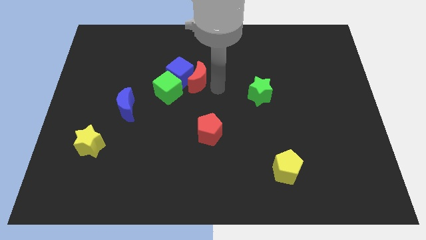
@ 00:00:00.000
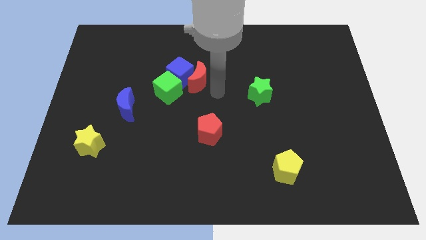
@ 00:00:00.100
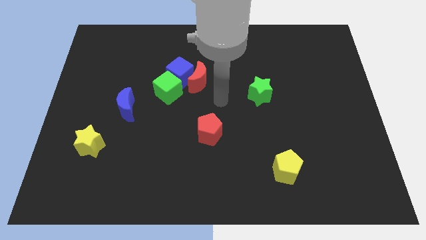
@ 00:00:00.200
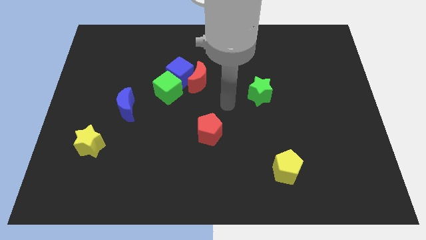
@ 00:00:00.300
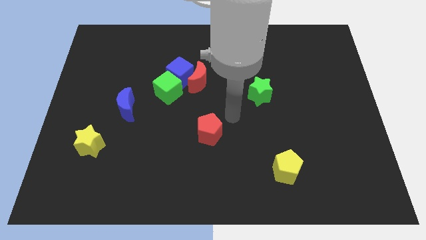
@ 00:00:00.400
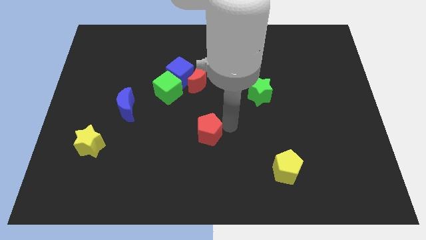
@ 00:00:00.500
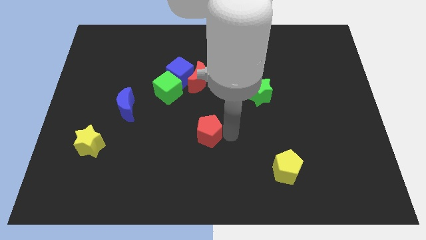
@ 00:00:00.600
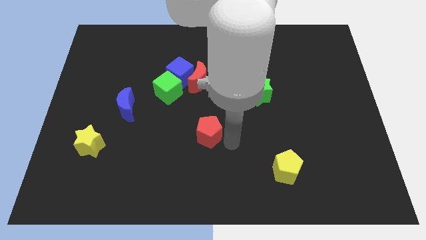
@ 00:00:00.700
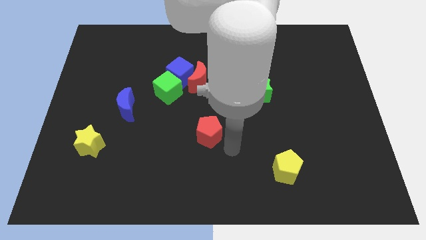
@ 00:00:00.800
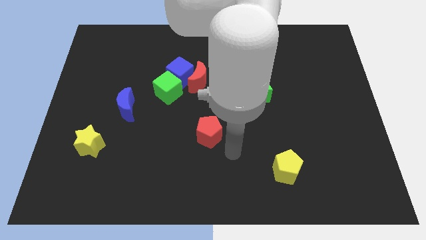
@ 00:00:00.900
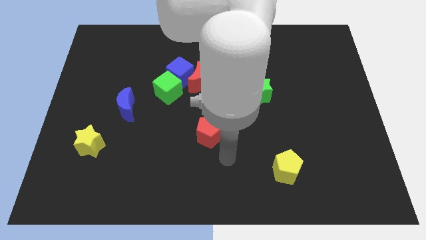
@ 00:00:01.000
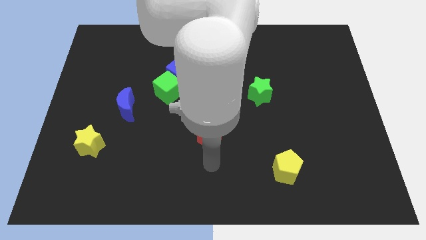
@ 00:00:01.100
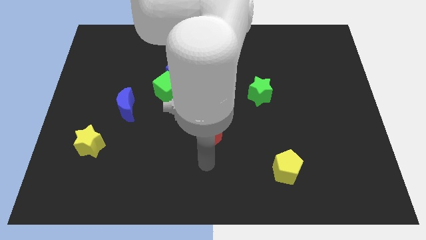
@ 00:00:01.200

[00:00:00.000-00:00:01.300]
point your arm at the bottom of the red pentagon

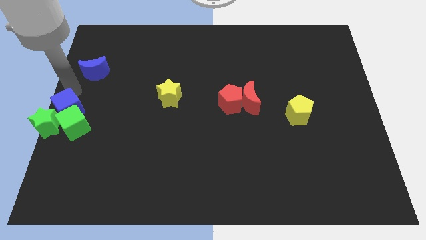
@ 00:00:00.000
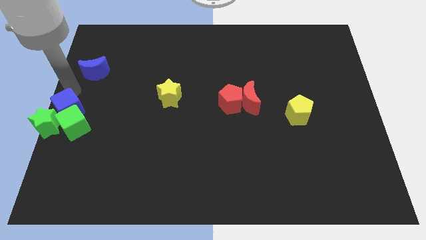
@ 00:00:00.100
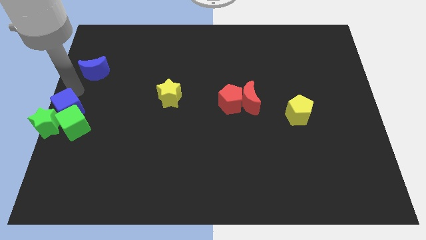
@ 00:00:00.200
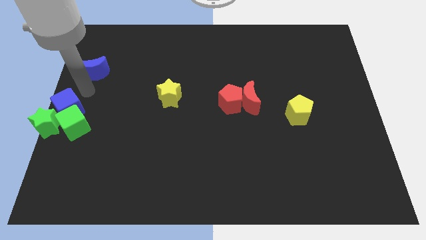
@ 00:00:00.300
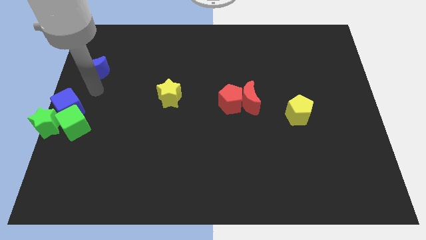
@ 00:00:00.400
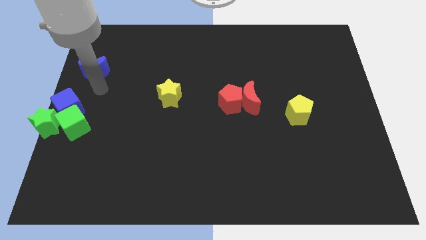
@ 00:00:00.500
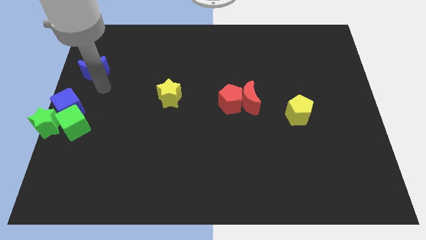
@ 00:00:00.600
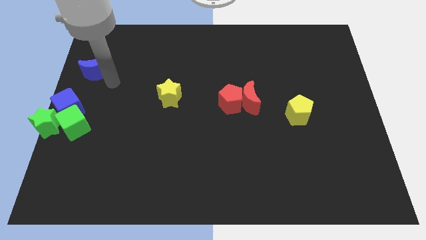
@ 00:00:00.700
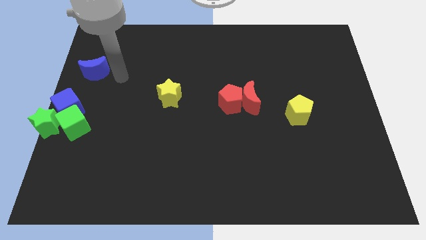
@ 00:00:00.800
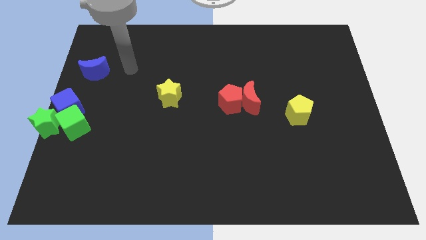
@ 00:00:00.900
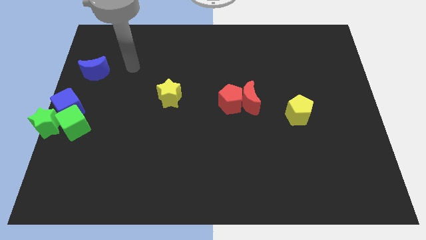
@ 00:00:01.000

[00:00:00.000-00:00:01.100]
move your hand away from blue cube

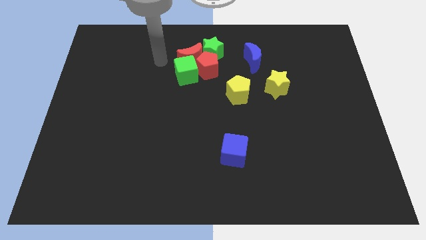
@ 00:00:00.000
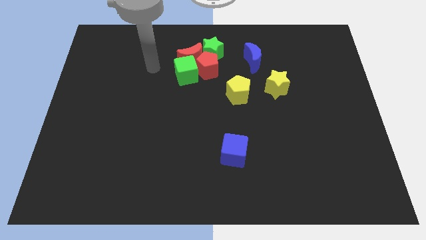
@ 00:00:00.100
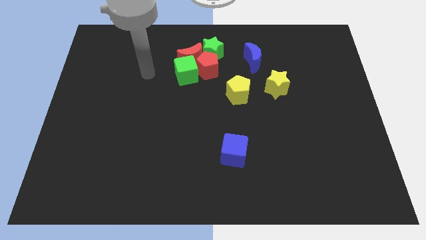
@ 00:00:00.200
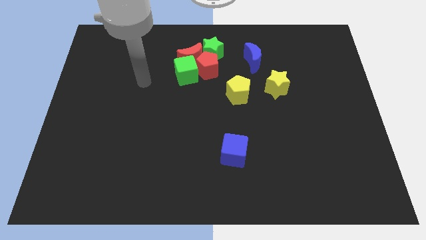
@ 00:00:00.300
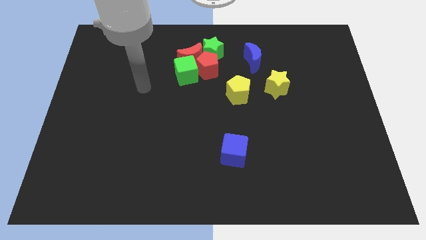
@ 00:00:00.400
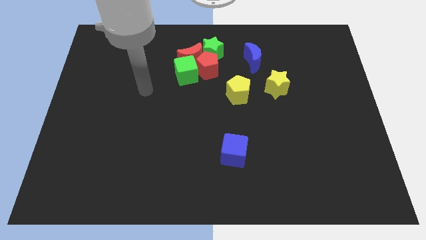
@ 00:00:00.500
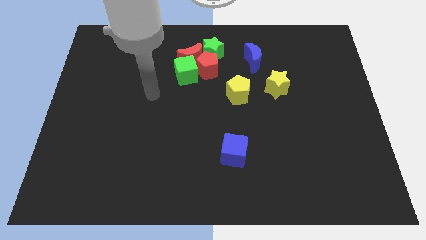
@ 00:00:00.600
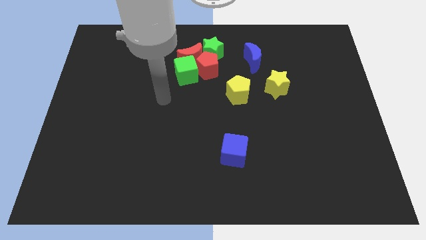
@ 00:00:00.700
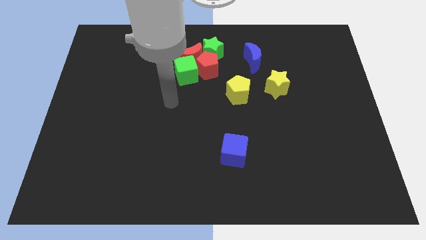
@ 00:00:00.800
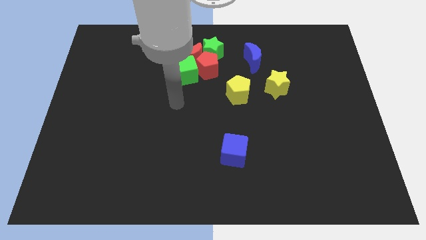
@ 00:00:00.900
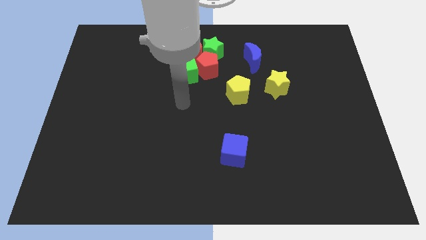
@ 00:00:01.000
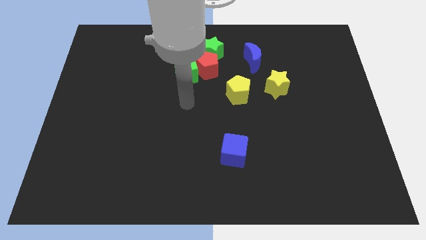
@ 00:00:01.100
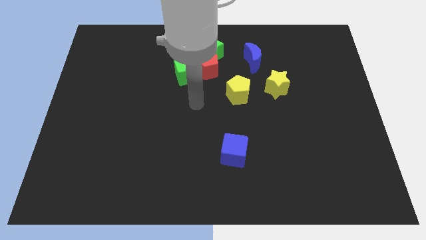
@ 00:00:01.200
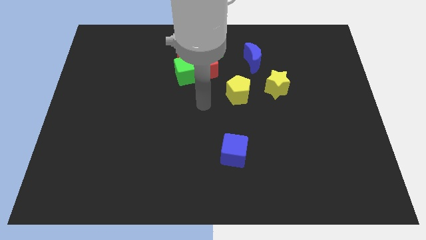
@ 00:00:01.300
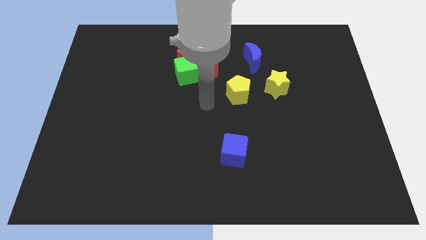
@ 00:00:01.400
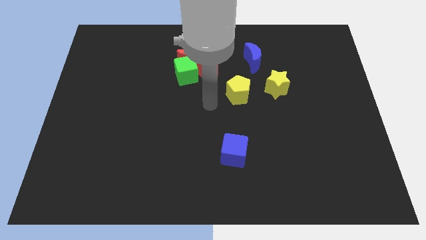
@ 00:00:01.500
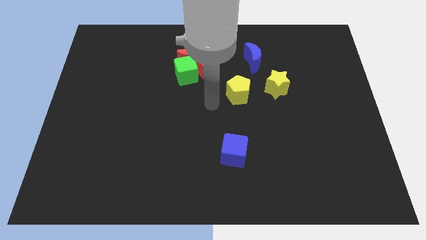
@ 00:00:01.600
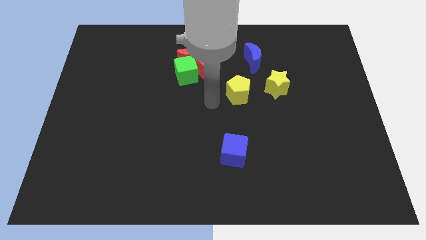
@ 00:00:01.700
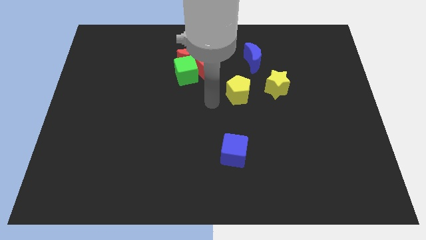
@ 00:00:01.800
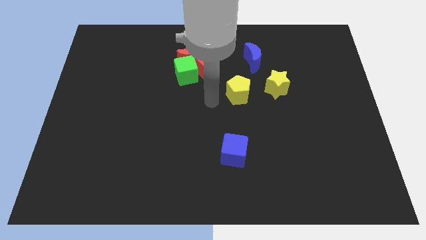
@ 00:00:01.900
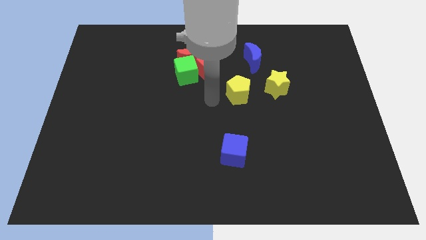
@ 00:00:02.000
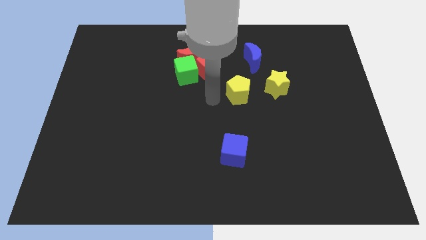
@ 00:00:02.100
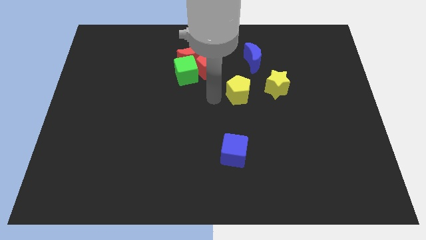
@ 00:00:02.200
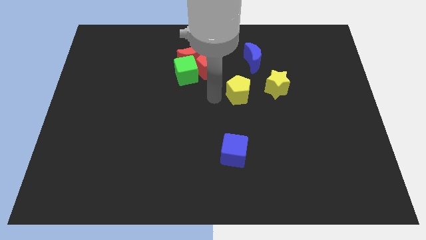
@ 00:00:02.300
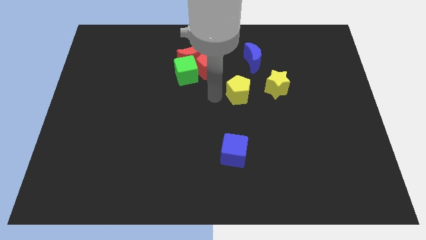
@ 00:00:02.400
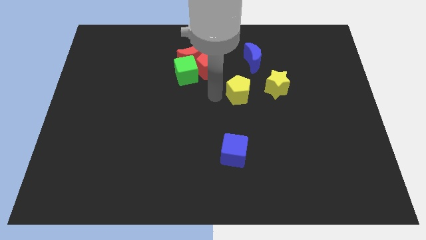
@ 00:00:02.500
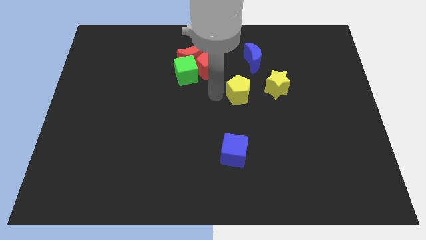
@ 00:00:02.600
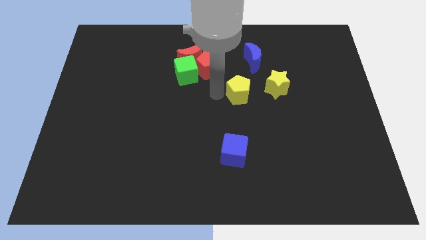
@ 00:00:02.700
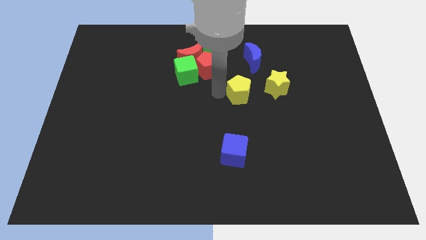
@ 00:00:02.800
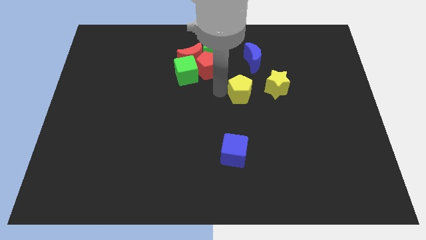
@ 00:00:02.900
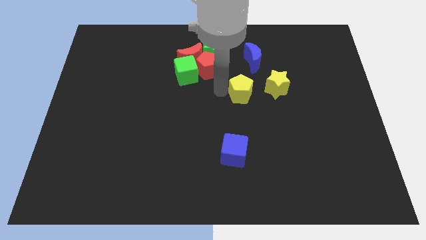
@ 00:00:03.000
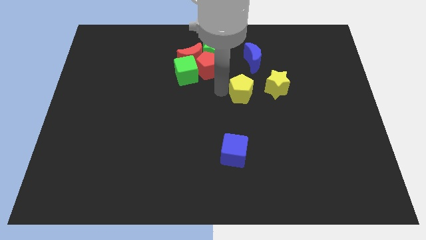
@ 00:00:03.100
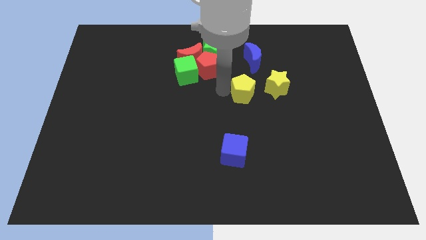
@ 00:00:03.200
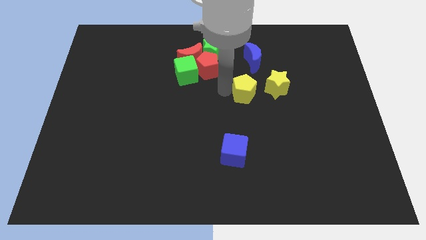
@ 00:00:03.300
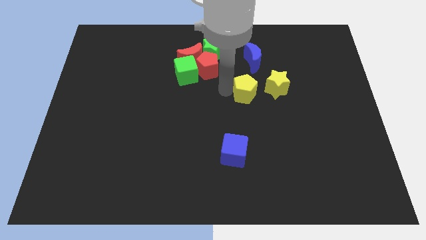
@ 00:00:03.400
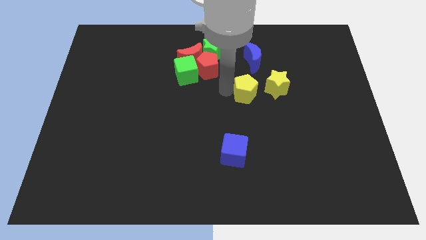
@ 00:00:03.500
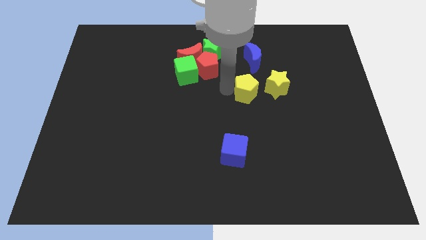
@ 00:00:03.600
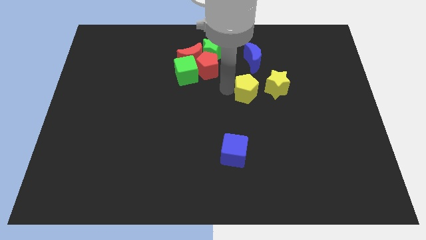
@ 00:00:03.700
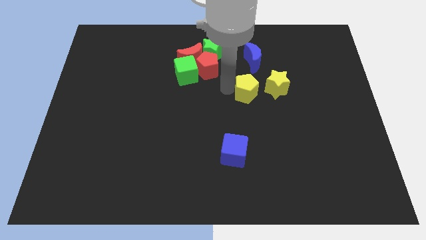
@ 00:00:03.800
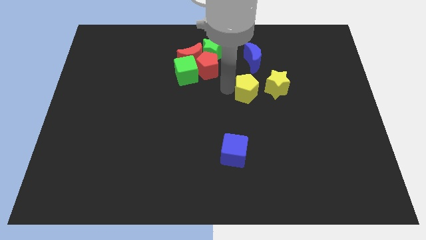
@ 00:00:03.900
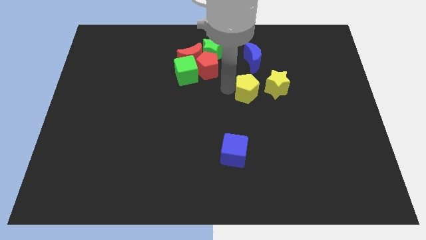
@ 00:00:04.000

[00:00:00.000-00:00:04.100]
slightly move the yellow pentagon left to the yellow star

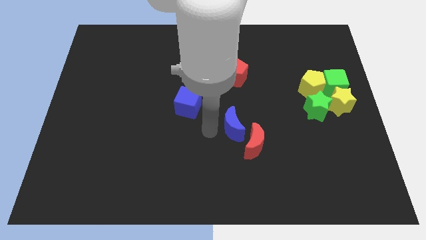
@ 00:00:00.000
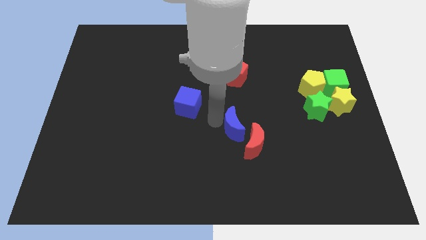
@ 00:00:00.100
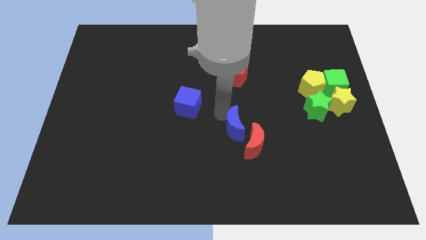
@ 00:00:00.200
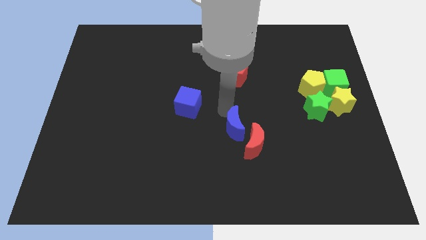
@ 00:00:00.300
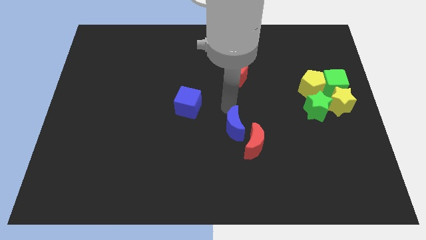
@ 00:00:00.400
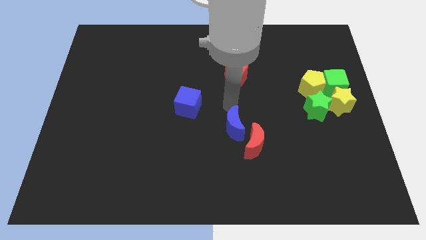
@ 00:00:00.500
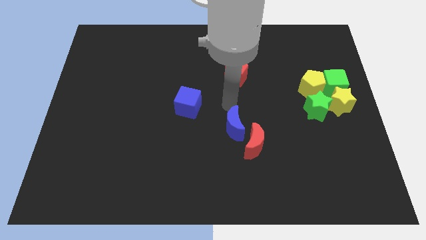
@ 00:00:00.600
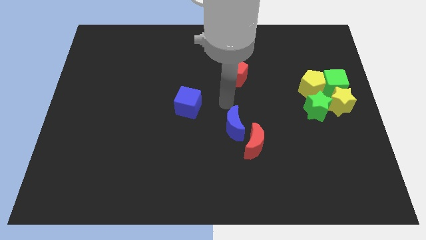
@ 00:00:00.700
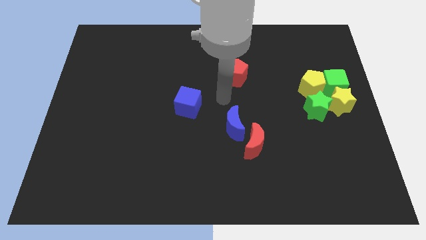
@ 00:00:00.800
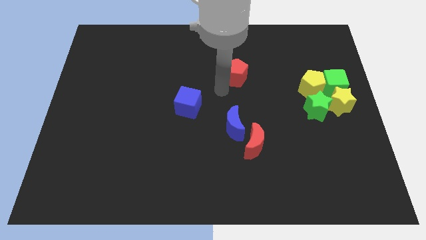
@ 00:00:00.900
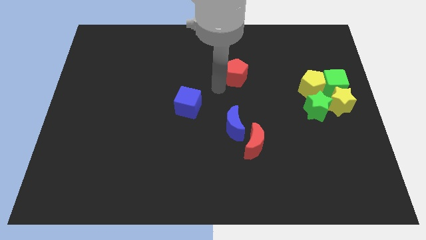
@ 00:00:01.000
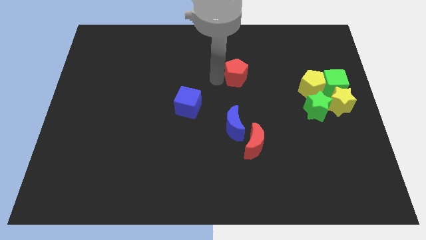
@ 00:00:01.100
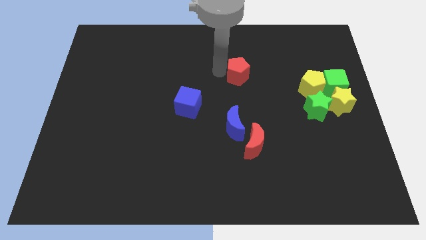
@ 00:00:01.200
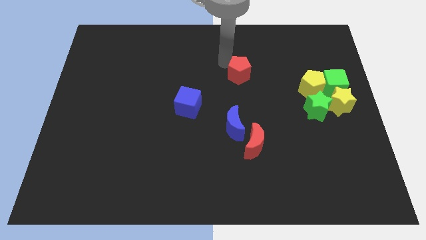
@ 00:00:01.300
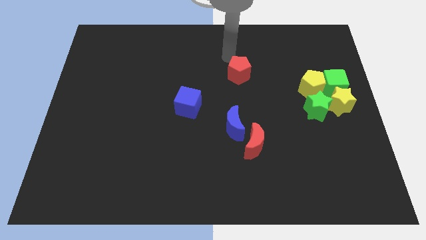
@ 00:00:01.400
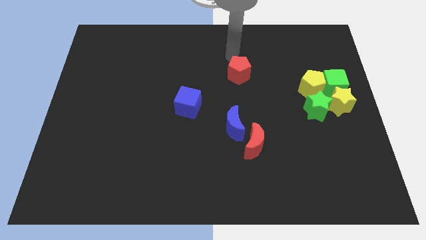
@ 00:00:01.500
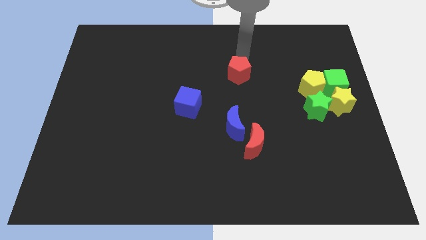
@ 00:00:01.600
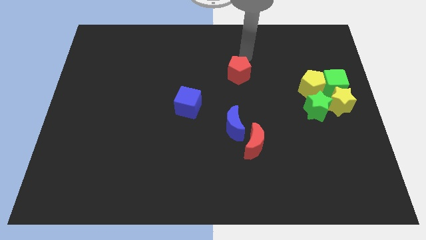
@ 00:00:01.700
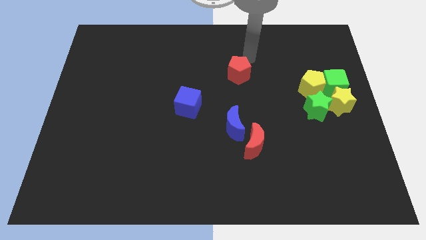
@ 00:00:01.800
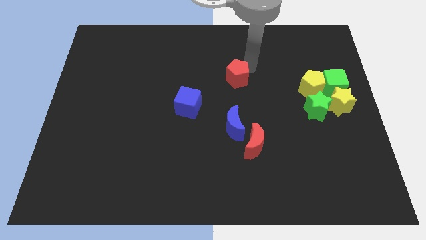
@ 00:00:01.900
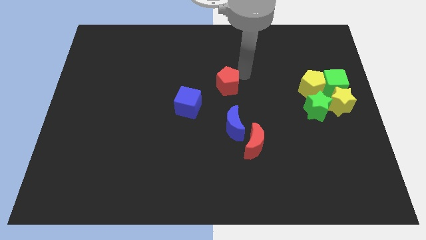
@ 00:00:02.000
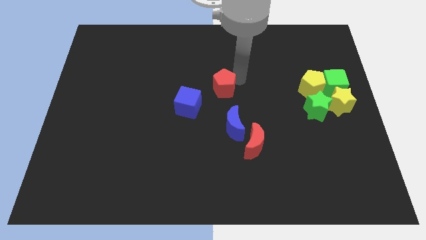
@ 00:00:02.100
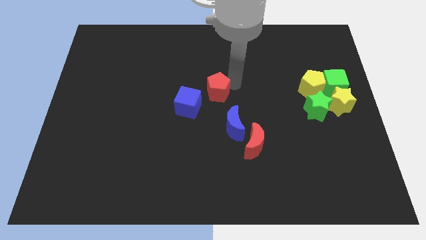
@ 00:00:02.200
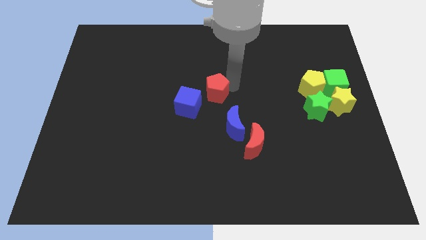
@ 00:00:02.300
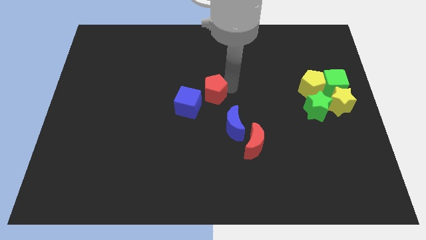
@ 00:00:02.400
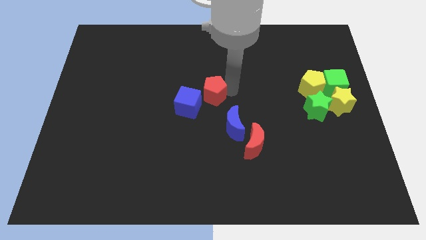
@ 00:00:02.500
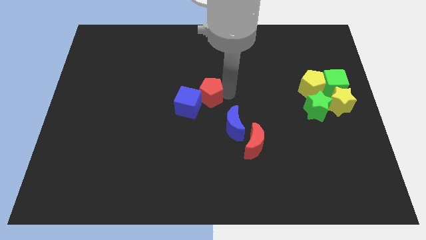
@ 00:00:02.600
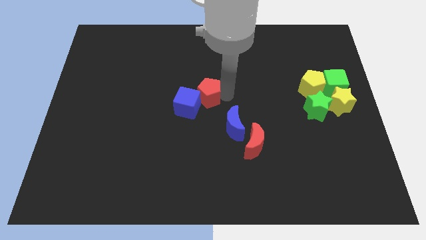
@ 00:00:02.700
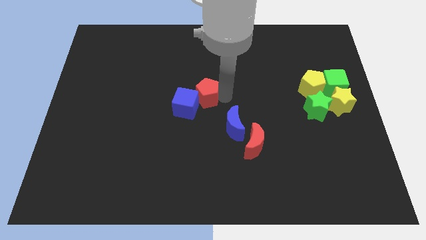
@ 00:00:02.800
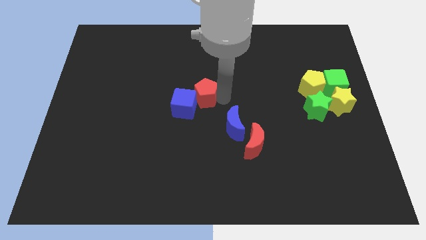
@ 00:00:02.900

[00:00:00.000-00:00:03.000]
place the red pentagon to the top right of the blue cube
